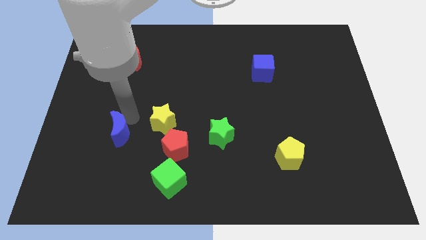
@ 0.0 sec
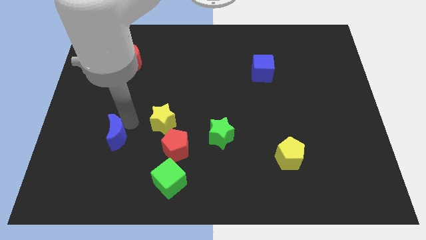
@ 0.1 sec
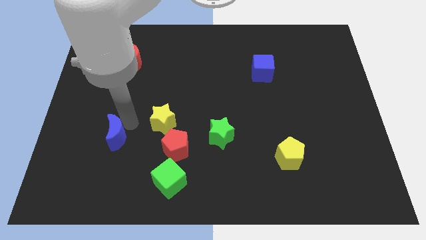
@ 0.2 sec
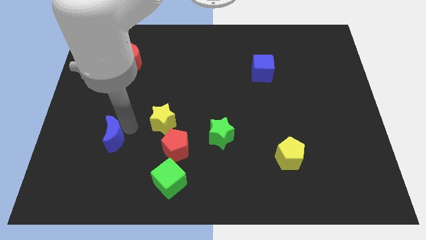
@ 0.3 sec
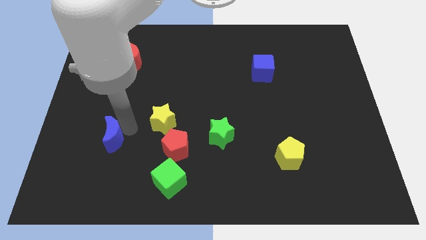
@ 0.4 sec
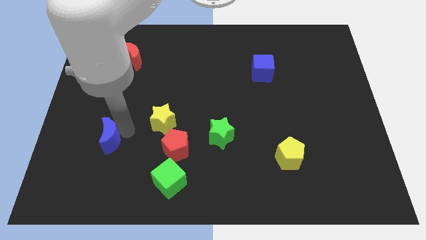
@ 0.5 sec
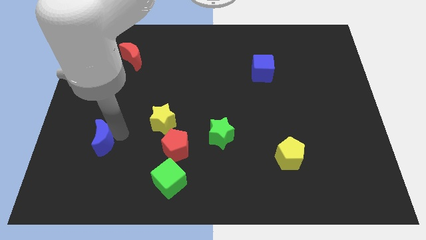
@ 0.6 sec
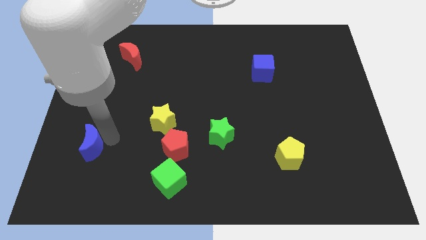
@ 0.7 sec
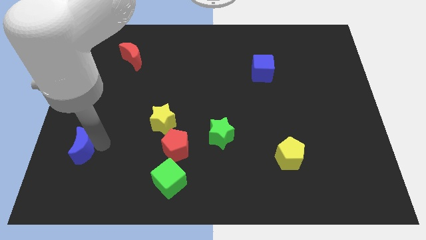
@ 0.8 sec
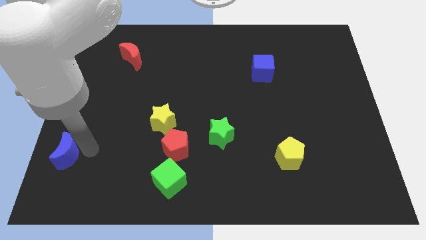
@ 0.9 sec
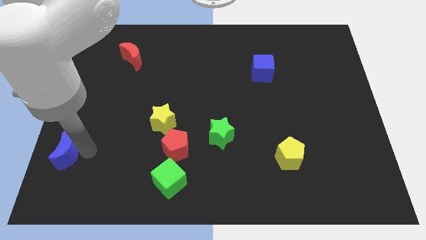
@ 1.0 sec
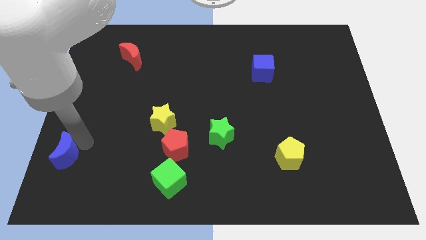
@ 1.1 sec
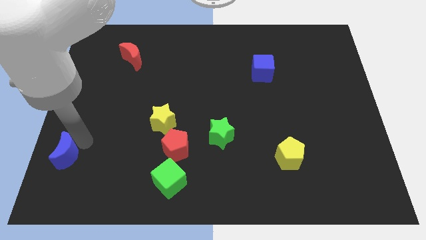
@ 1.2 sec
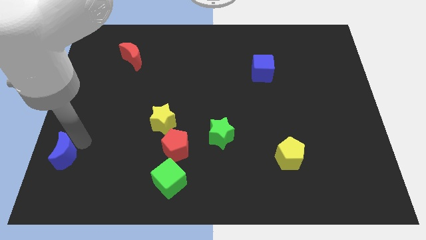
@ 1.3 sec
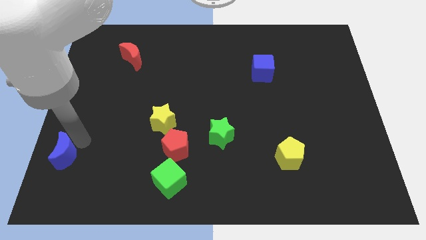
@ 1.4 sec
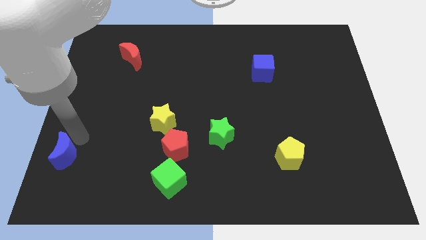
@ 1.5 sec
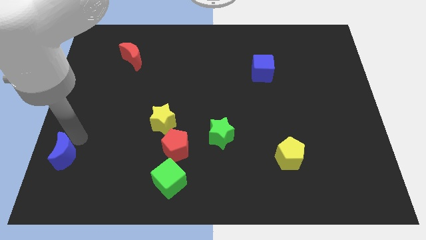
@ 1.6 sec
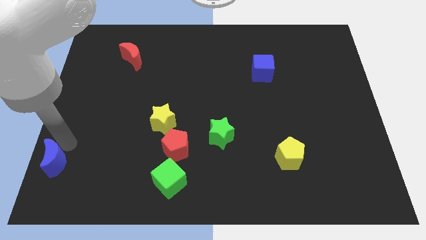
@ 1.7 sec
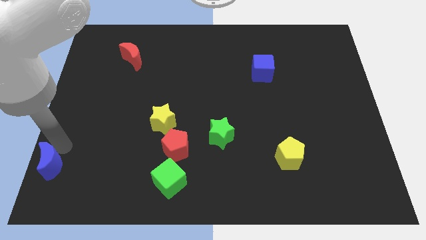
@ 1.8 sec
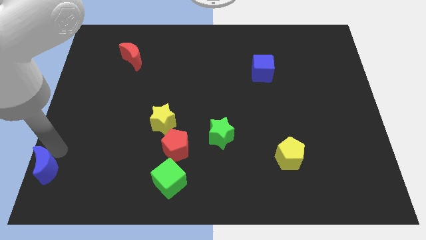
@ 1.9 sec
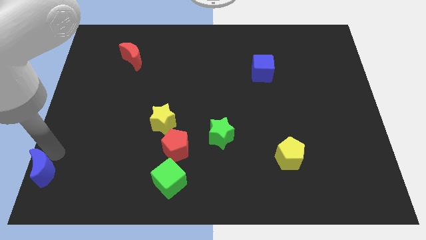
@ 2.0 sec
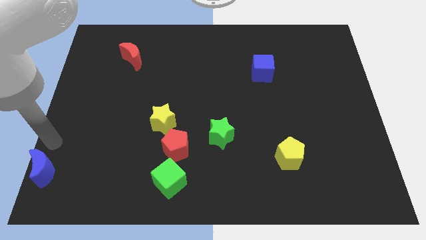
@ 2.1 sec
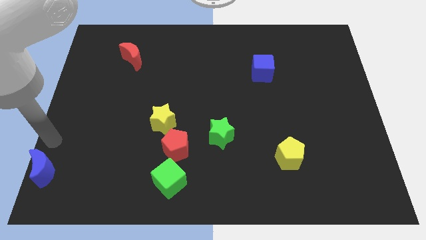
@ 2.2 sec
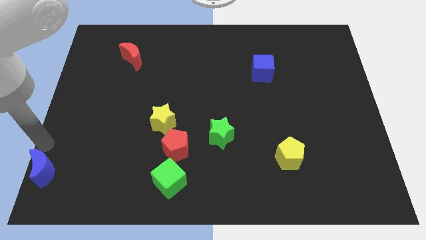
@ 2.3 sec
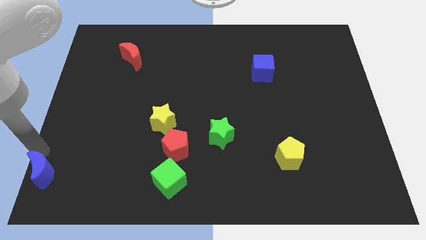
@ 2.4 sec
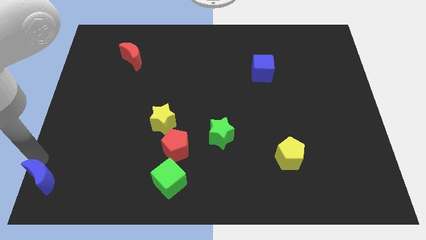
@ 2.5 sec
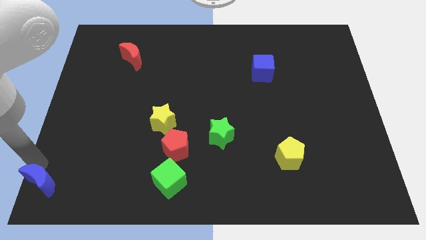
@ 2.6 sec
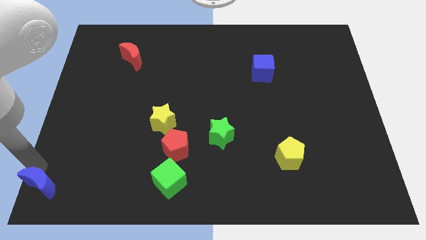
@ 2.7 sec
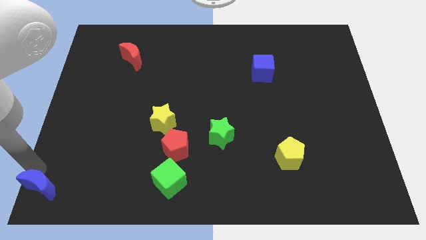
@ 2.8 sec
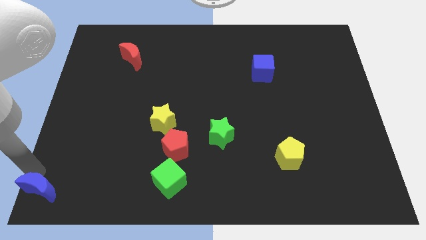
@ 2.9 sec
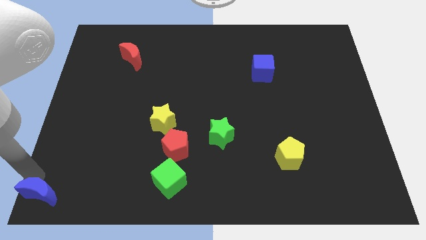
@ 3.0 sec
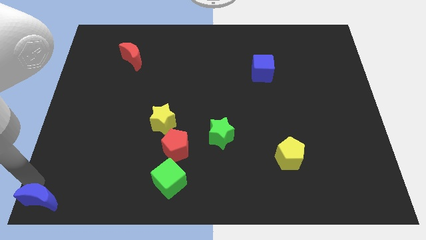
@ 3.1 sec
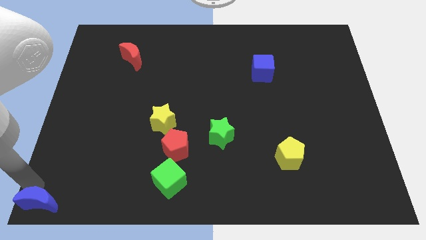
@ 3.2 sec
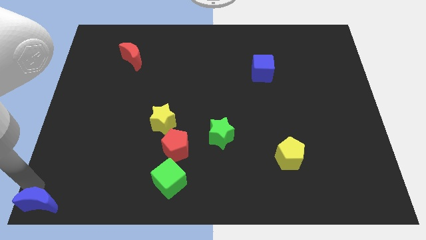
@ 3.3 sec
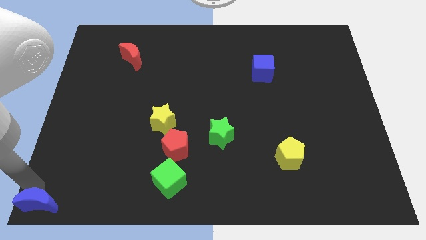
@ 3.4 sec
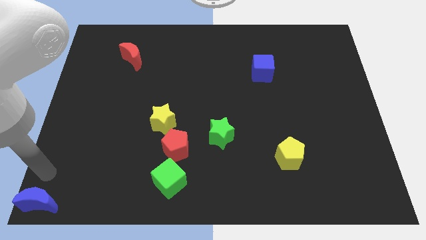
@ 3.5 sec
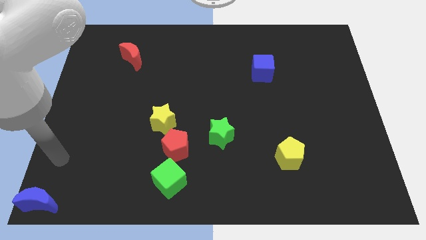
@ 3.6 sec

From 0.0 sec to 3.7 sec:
move blue moon to bottom left corner

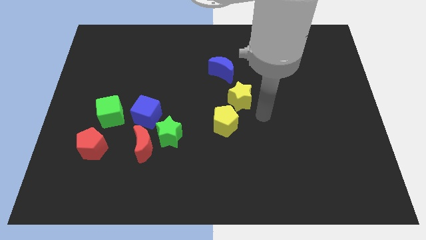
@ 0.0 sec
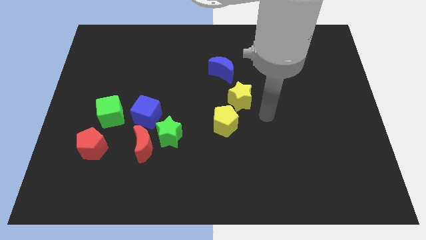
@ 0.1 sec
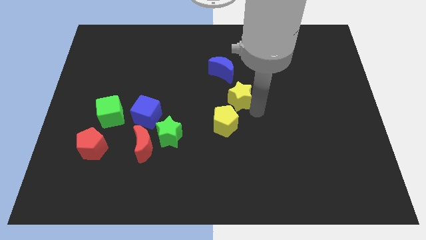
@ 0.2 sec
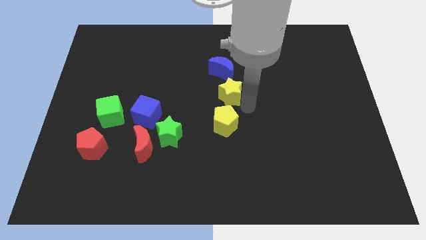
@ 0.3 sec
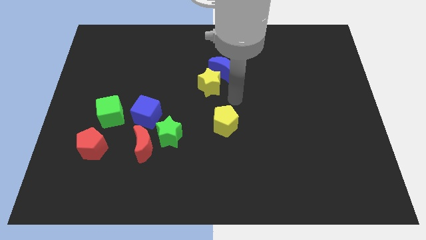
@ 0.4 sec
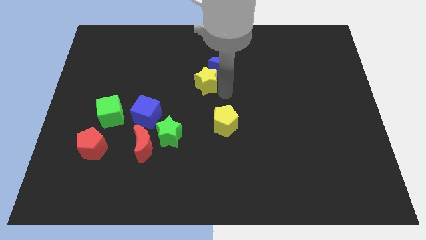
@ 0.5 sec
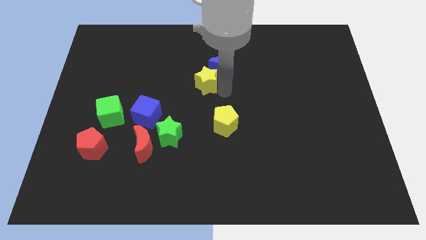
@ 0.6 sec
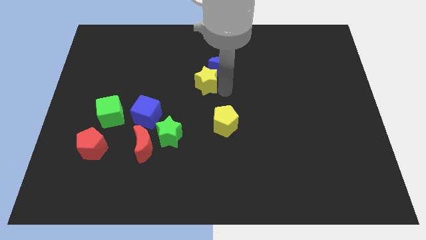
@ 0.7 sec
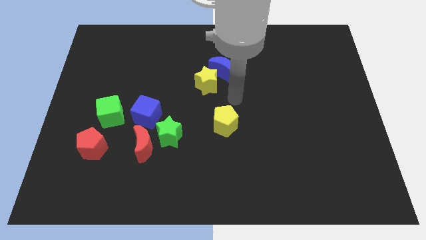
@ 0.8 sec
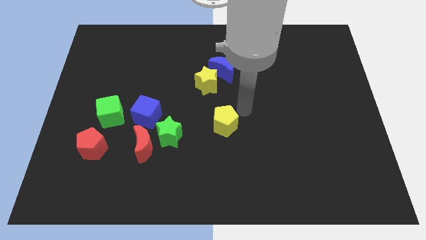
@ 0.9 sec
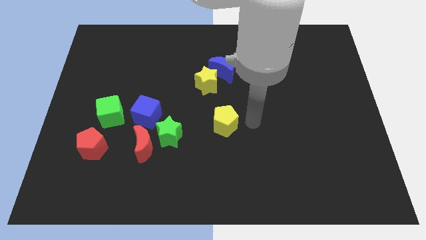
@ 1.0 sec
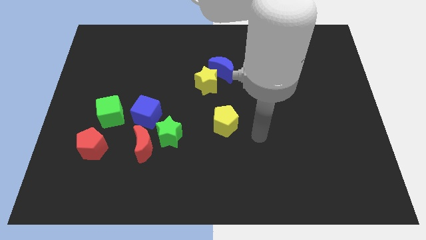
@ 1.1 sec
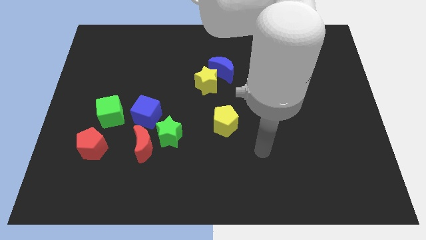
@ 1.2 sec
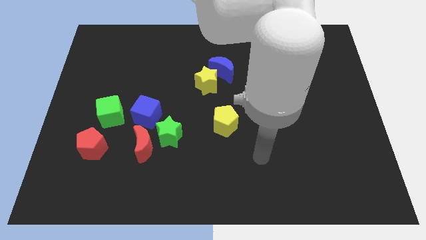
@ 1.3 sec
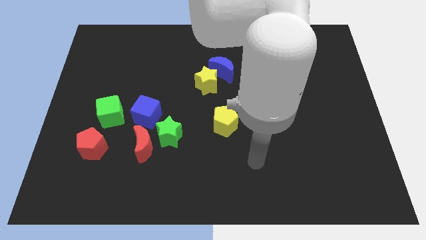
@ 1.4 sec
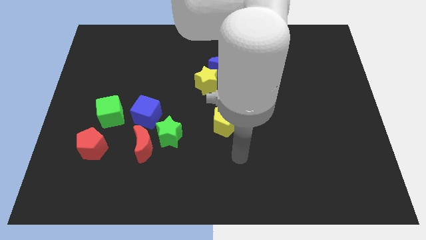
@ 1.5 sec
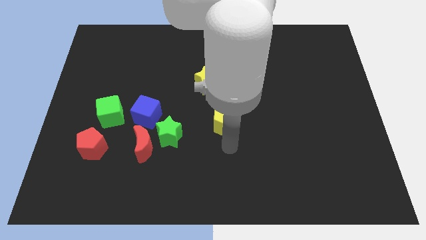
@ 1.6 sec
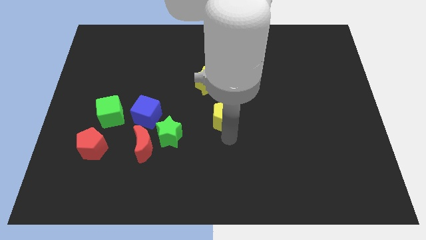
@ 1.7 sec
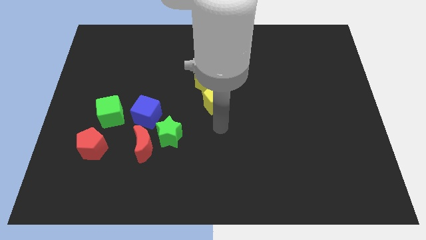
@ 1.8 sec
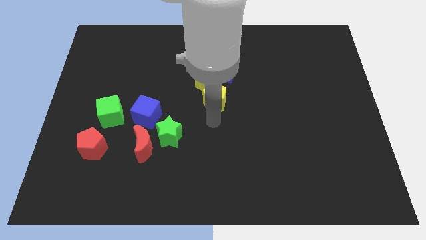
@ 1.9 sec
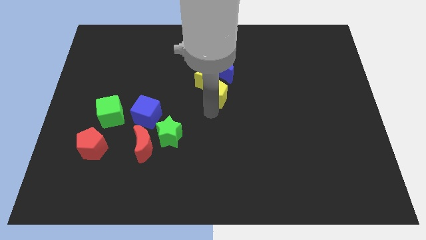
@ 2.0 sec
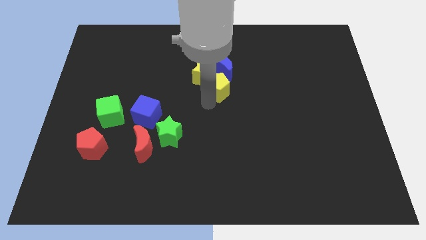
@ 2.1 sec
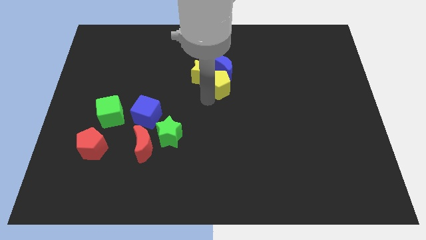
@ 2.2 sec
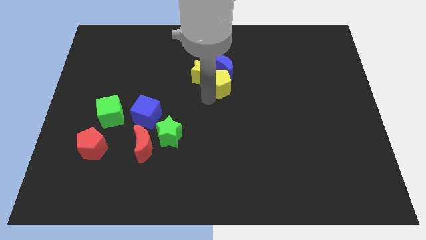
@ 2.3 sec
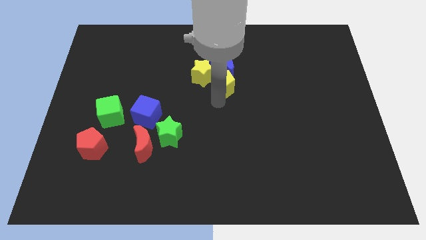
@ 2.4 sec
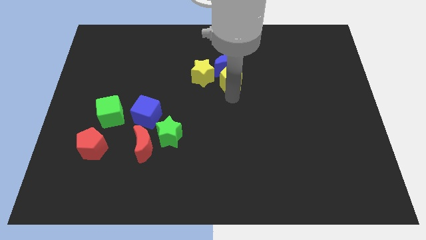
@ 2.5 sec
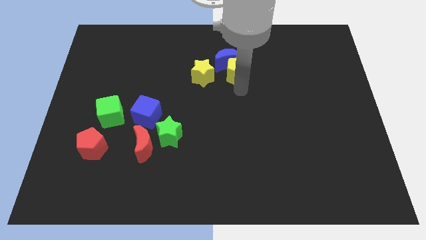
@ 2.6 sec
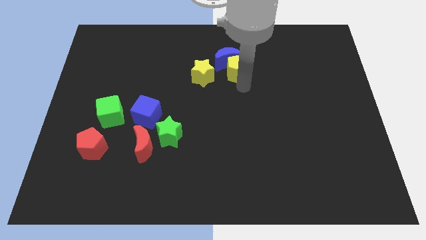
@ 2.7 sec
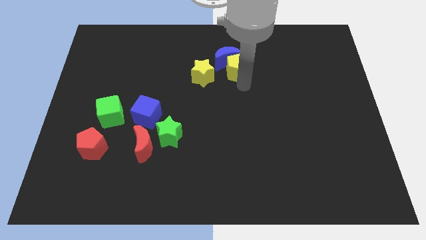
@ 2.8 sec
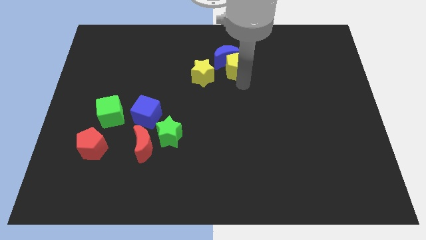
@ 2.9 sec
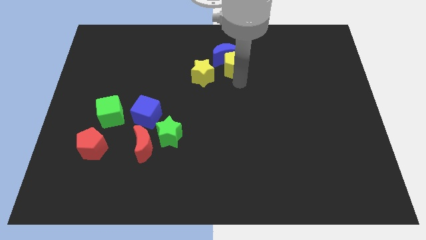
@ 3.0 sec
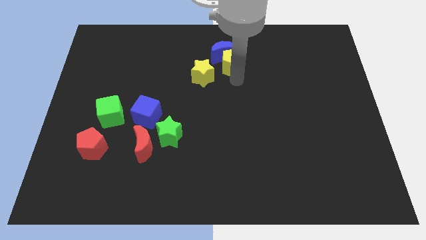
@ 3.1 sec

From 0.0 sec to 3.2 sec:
place the yellow star yellow pentagon into the blue moon

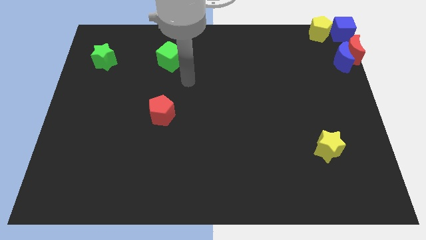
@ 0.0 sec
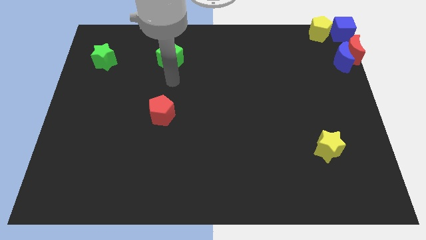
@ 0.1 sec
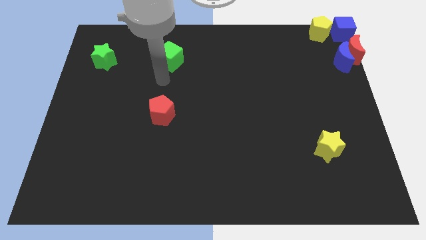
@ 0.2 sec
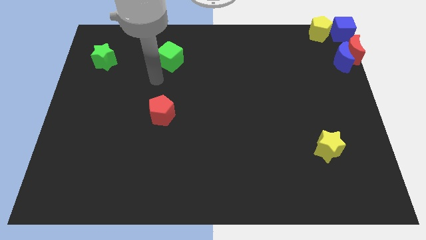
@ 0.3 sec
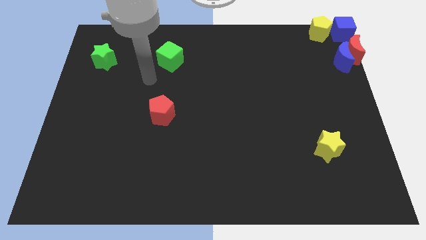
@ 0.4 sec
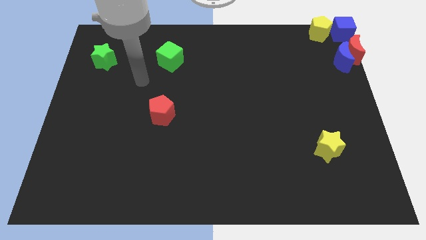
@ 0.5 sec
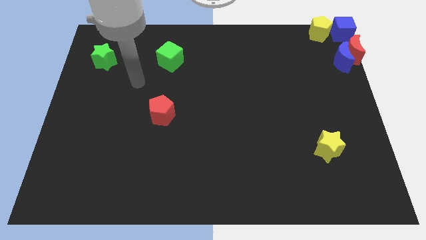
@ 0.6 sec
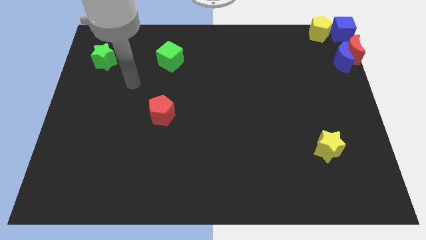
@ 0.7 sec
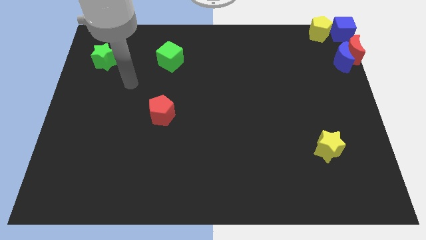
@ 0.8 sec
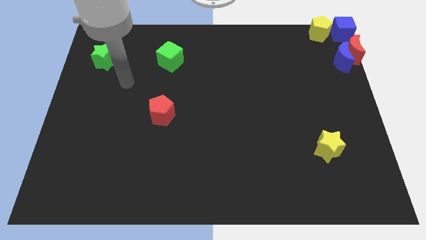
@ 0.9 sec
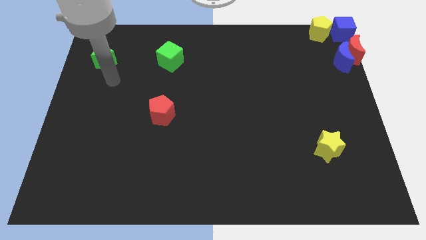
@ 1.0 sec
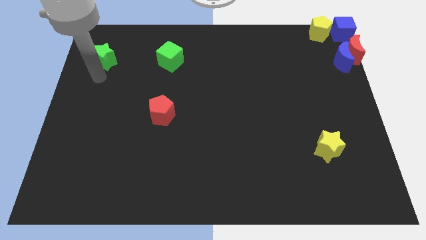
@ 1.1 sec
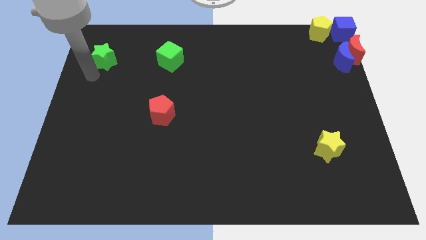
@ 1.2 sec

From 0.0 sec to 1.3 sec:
move your hand towards the green star

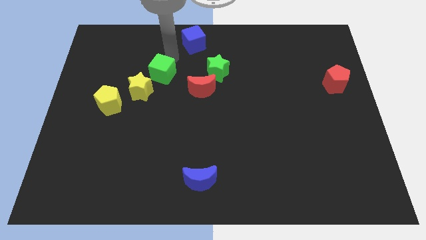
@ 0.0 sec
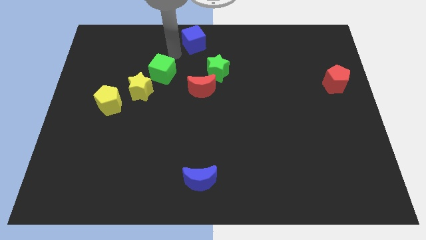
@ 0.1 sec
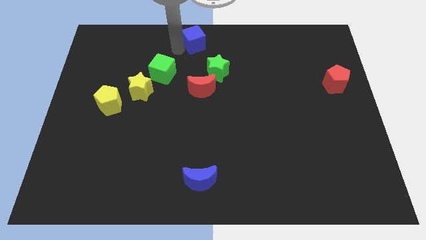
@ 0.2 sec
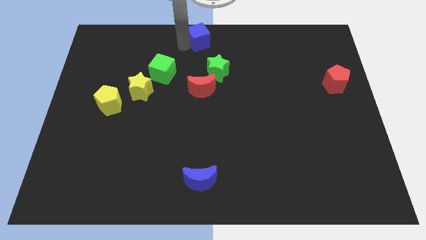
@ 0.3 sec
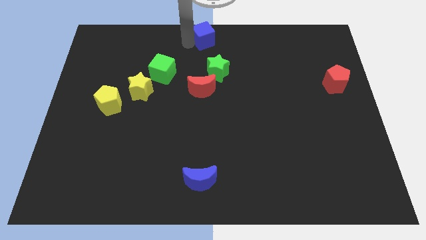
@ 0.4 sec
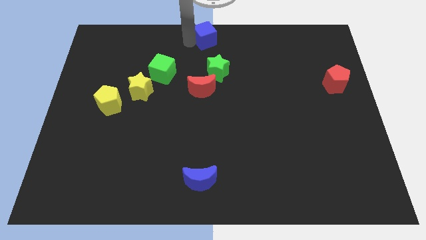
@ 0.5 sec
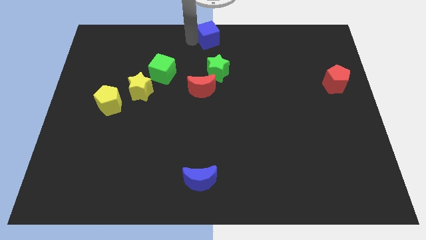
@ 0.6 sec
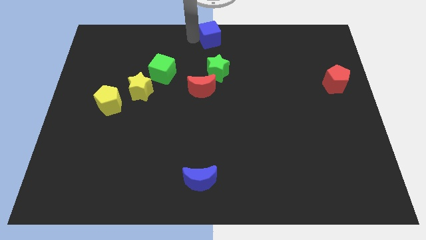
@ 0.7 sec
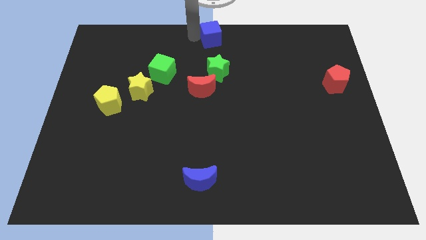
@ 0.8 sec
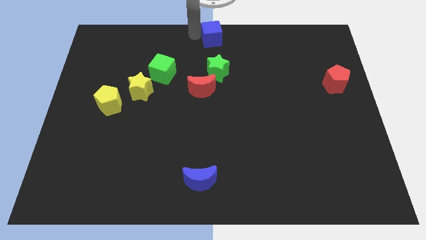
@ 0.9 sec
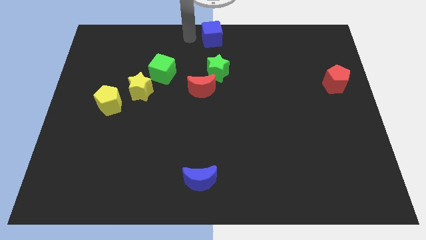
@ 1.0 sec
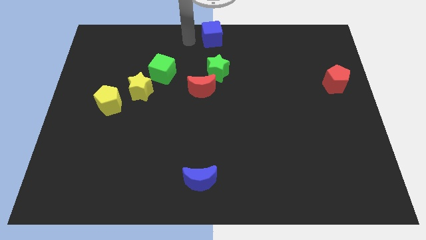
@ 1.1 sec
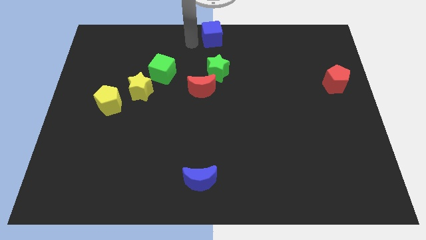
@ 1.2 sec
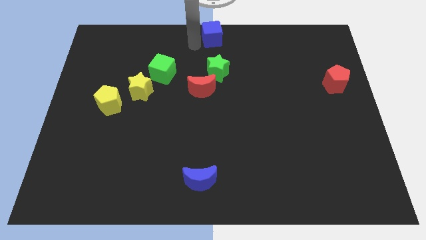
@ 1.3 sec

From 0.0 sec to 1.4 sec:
adjust the blue cube at center of the cube
